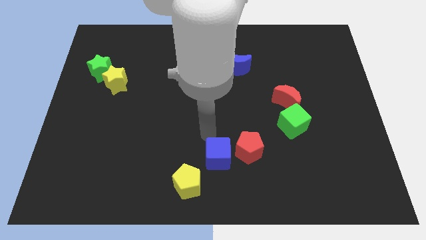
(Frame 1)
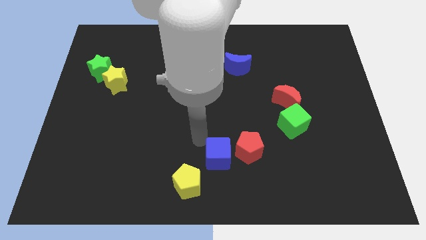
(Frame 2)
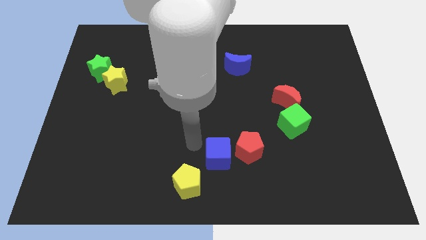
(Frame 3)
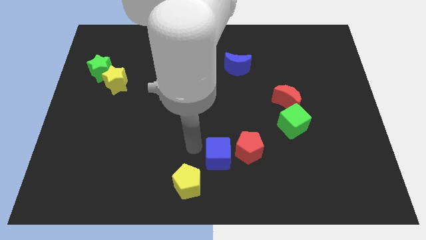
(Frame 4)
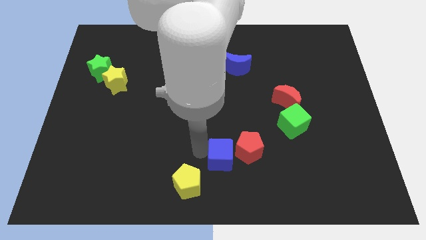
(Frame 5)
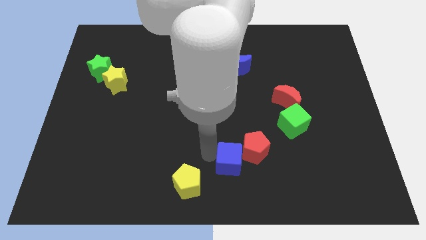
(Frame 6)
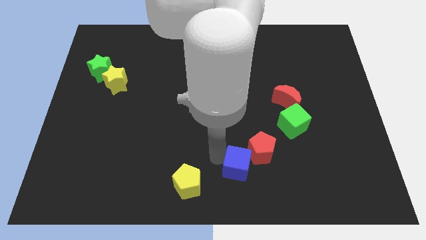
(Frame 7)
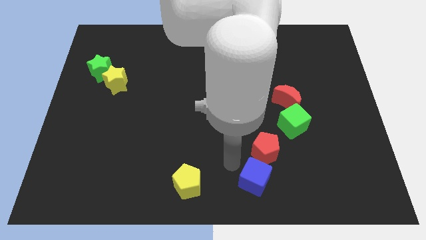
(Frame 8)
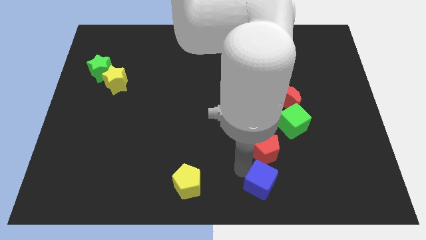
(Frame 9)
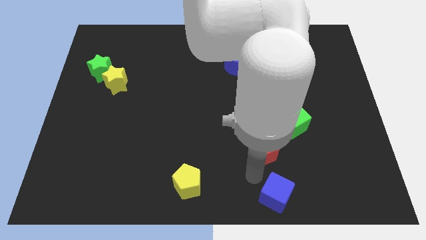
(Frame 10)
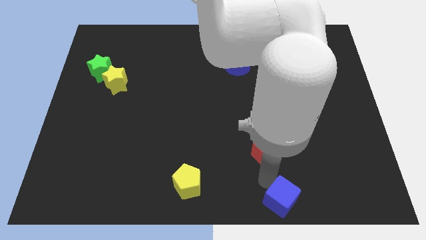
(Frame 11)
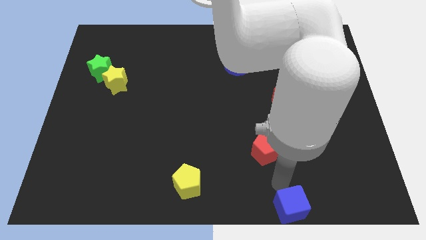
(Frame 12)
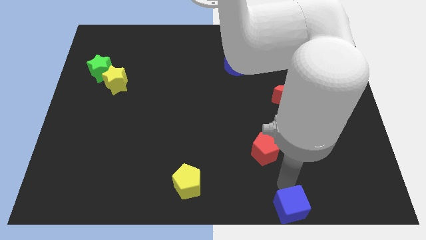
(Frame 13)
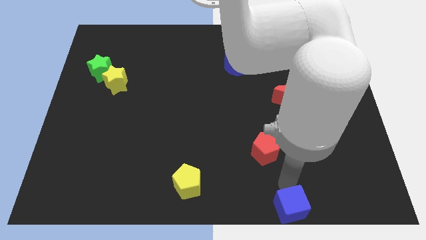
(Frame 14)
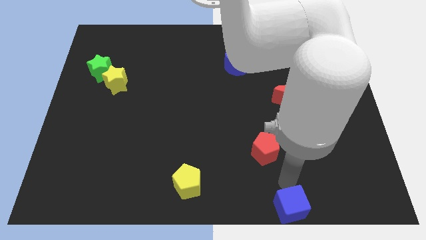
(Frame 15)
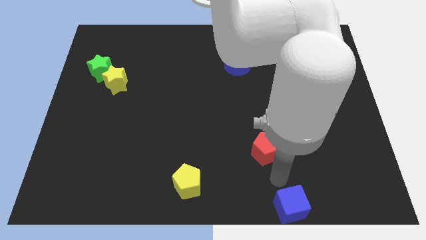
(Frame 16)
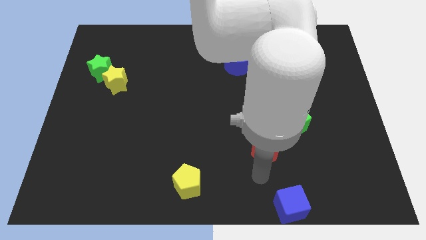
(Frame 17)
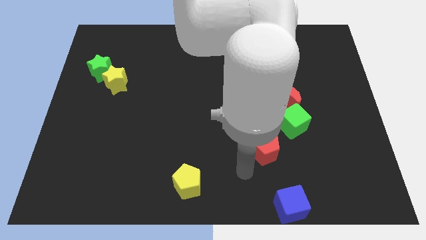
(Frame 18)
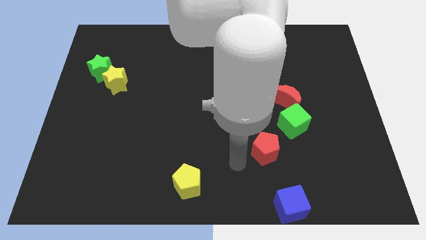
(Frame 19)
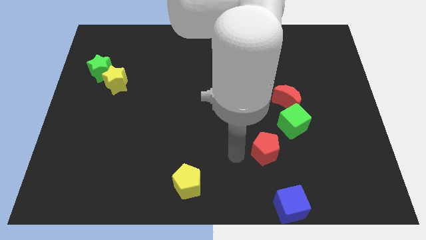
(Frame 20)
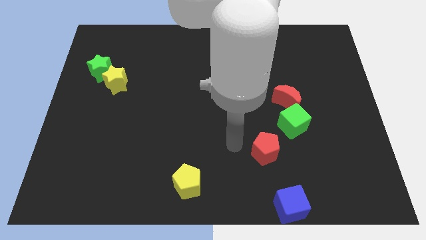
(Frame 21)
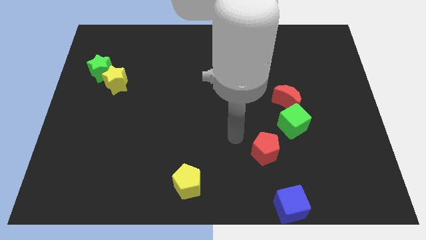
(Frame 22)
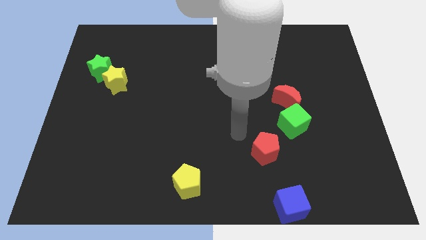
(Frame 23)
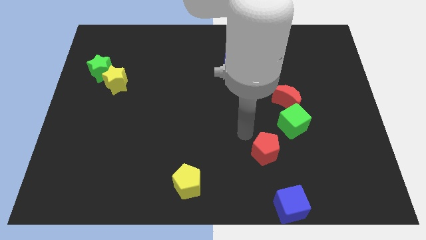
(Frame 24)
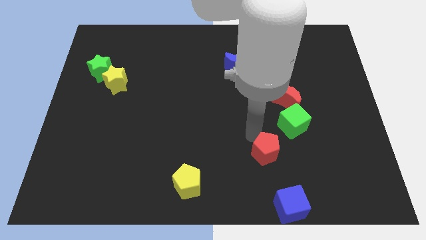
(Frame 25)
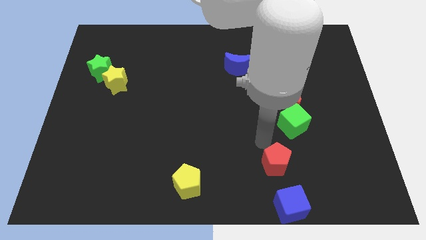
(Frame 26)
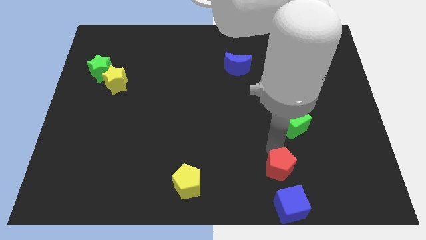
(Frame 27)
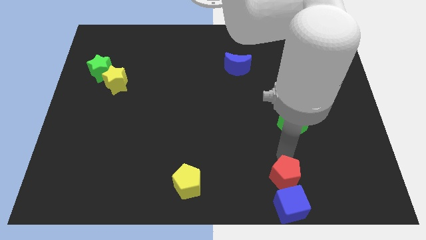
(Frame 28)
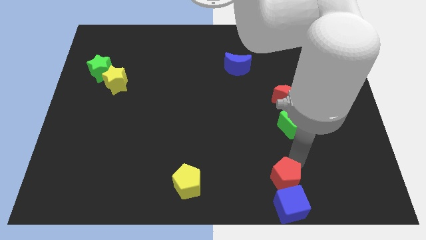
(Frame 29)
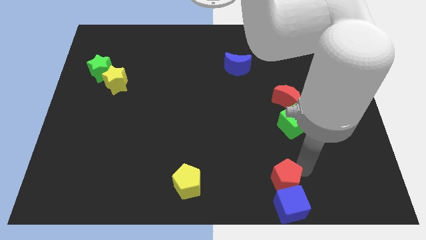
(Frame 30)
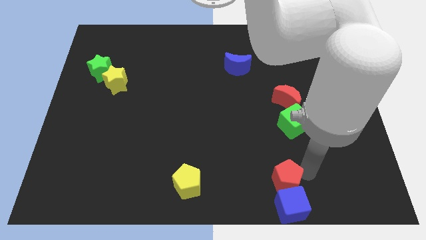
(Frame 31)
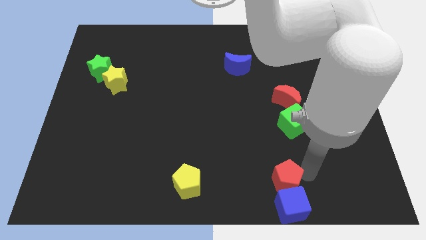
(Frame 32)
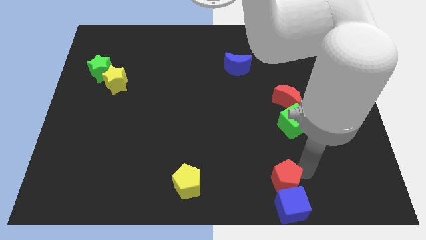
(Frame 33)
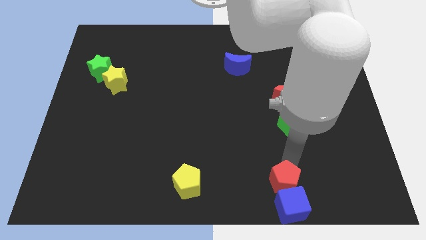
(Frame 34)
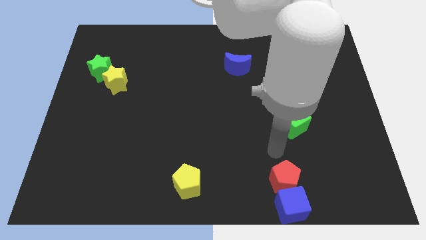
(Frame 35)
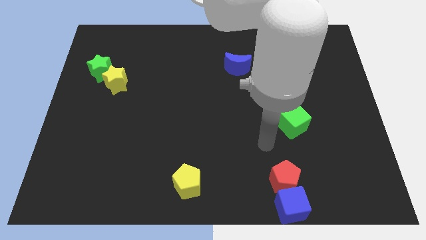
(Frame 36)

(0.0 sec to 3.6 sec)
move the blue cube and red pentagon to the bottom side of the table

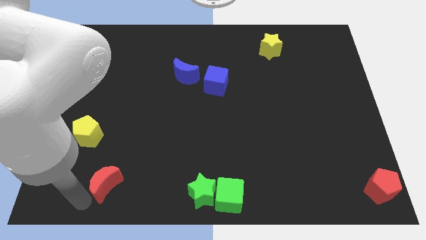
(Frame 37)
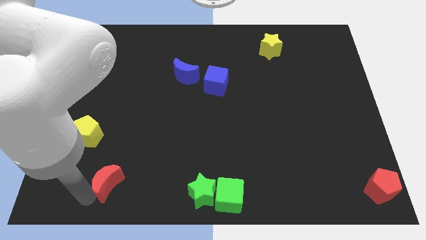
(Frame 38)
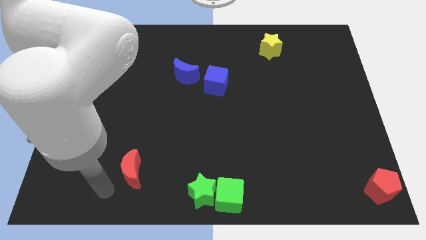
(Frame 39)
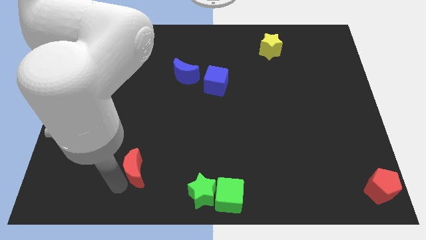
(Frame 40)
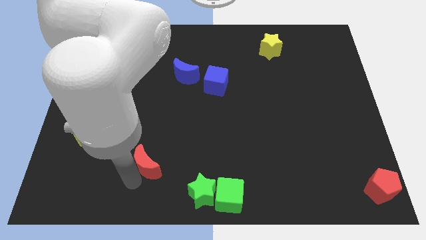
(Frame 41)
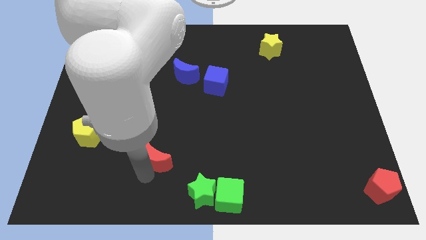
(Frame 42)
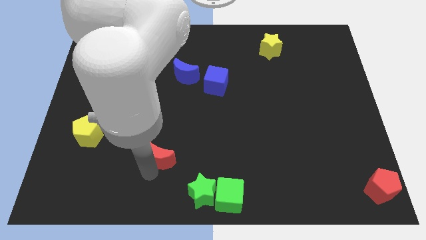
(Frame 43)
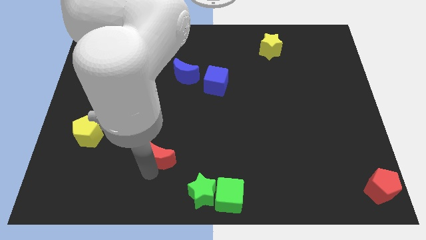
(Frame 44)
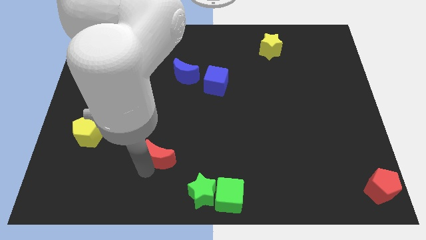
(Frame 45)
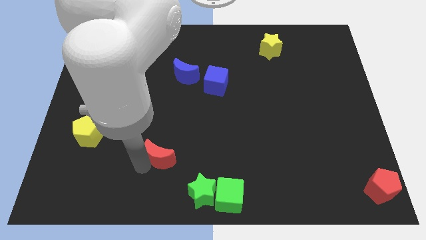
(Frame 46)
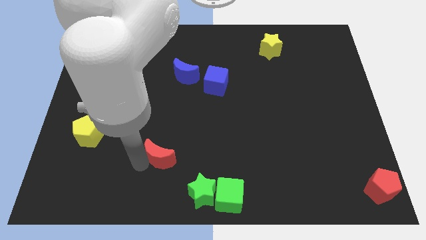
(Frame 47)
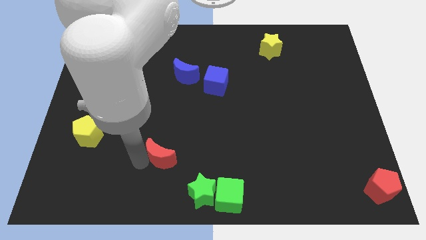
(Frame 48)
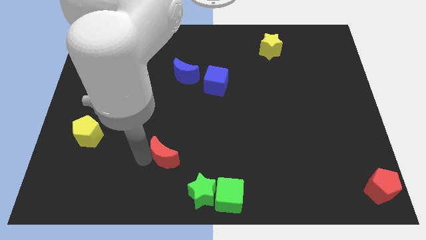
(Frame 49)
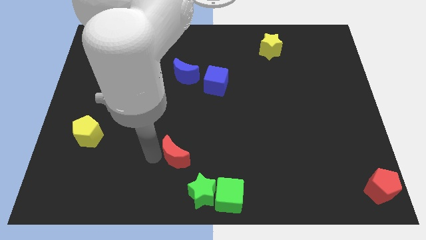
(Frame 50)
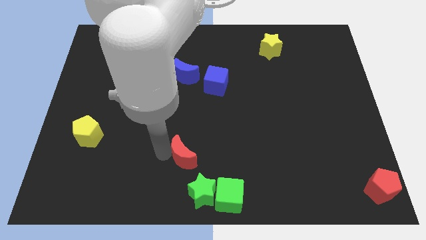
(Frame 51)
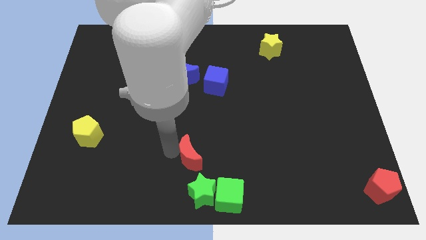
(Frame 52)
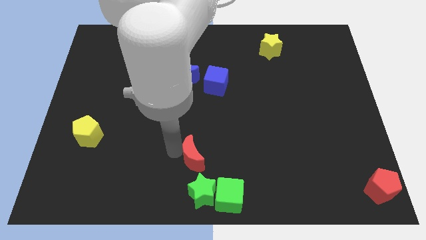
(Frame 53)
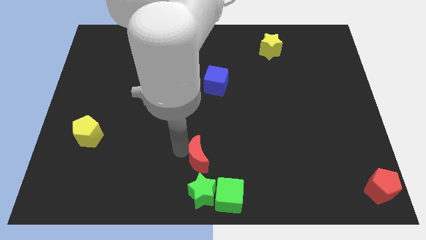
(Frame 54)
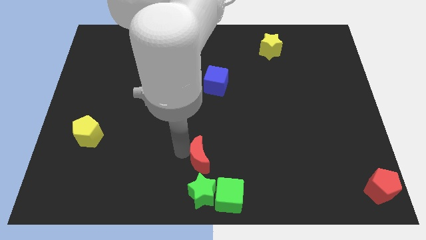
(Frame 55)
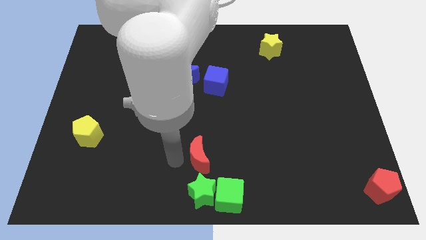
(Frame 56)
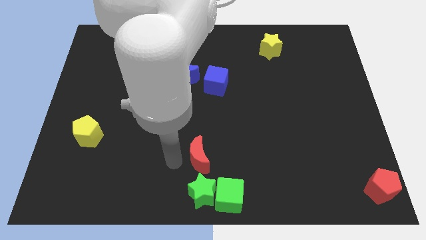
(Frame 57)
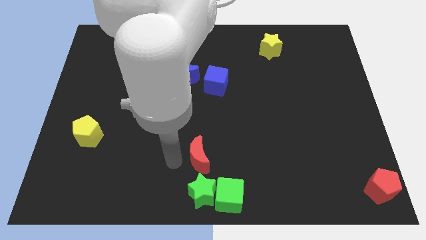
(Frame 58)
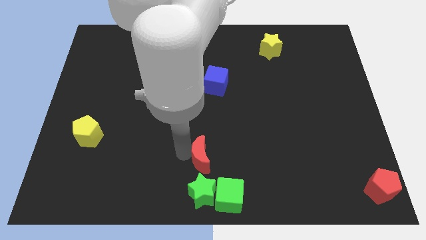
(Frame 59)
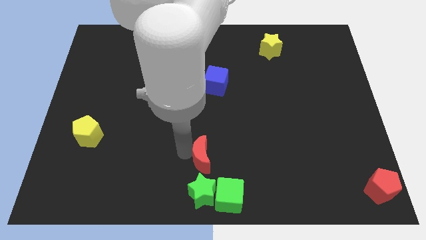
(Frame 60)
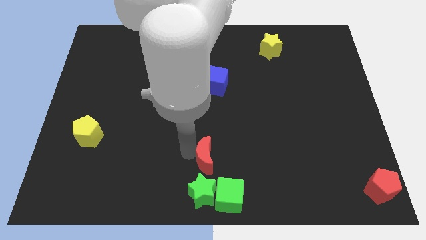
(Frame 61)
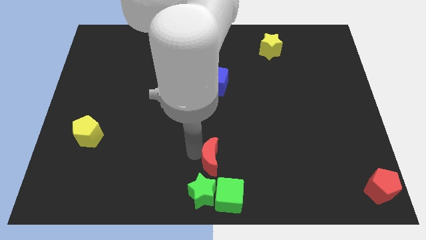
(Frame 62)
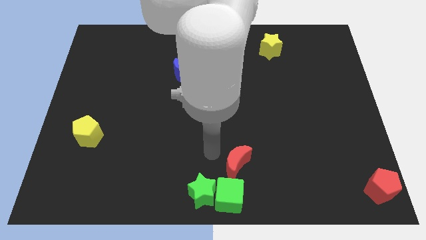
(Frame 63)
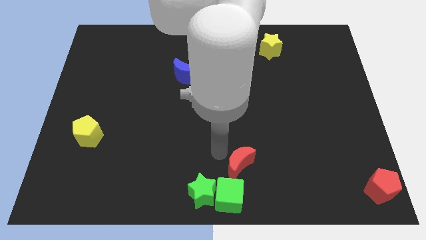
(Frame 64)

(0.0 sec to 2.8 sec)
push red crescent above green cube

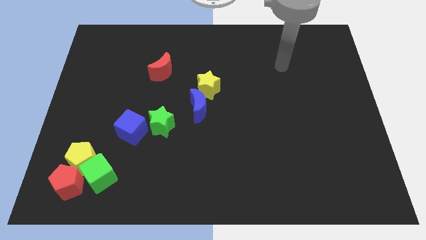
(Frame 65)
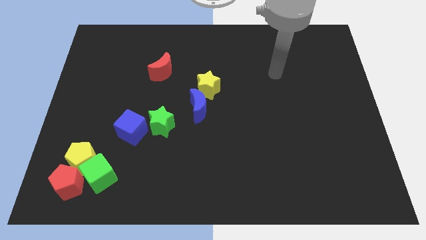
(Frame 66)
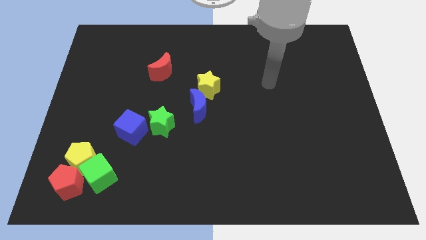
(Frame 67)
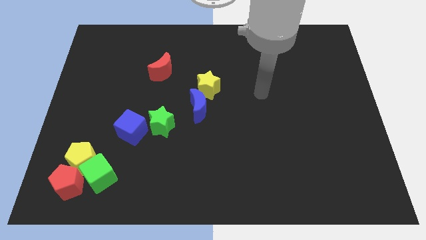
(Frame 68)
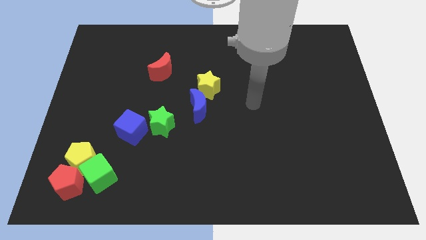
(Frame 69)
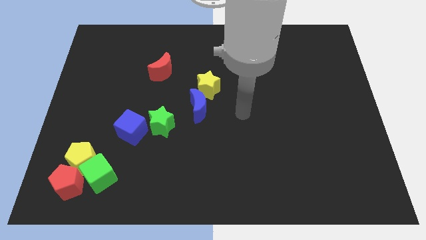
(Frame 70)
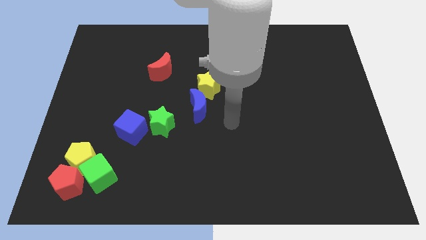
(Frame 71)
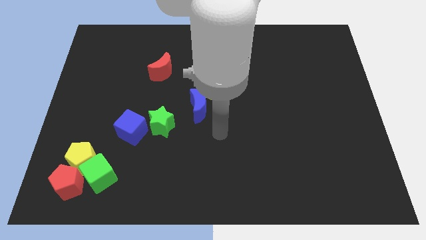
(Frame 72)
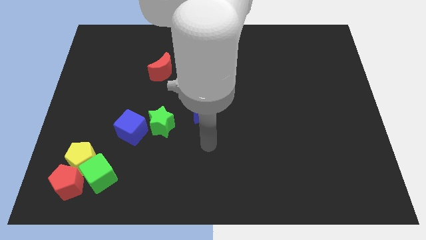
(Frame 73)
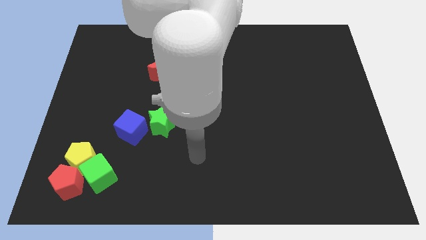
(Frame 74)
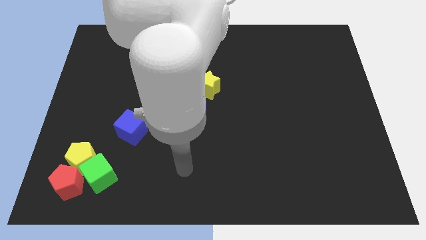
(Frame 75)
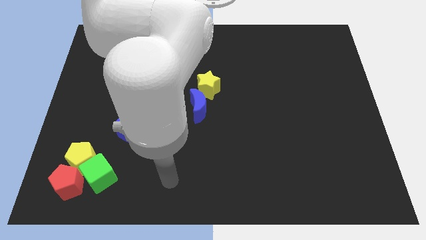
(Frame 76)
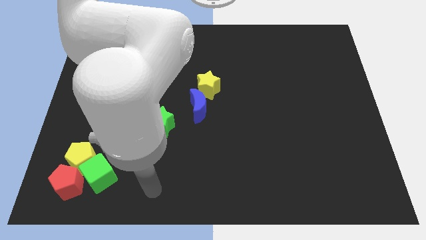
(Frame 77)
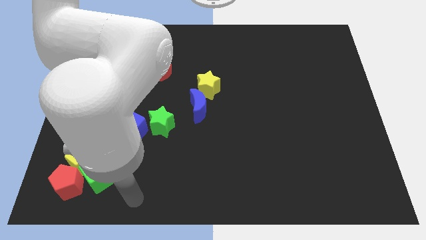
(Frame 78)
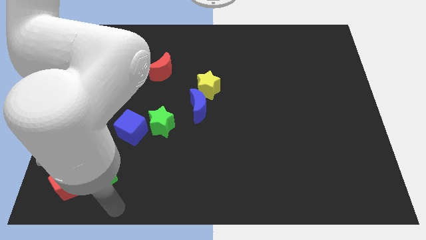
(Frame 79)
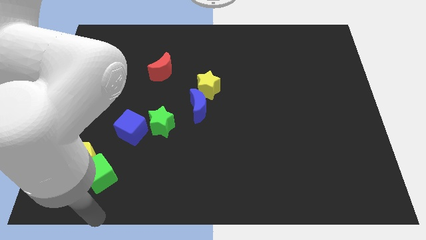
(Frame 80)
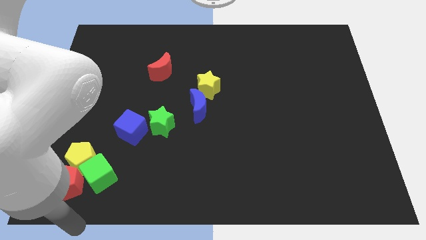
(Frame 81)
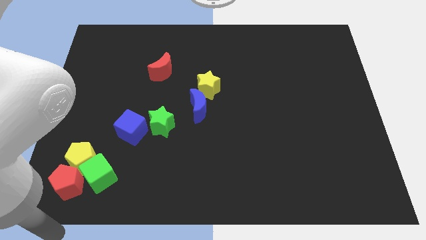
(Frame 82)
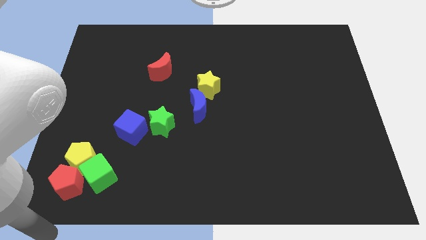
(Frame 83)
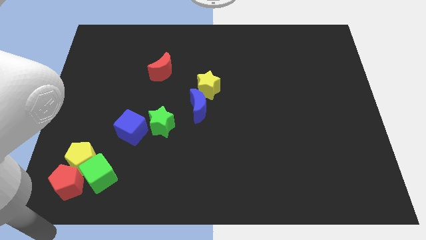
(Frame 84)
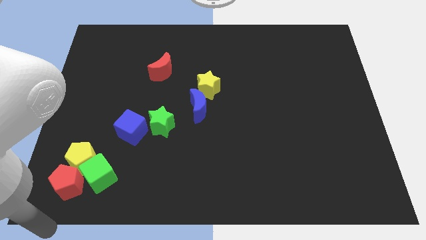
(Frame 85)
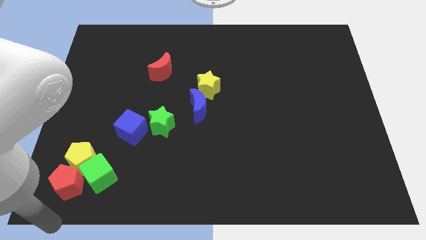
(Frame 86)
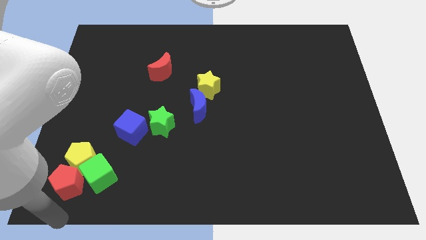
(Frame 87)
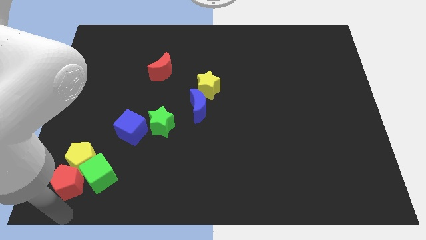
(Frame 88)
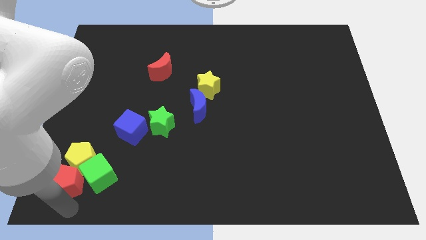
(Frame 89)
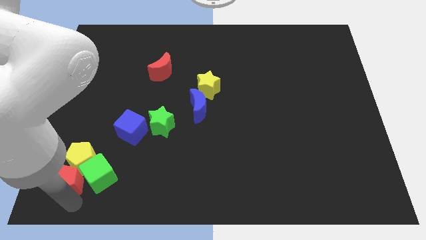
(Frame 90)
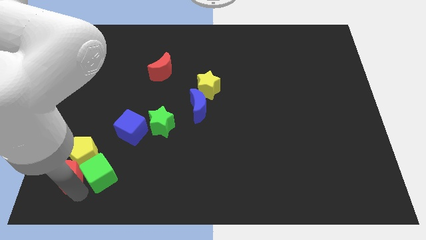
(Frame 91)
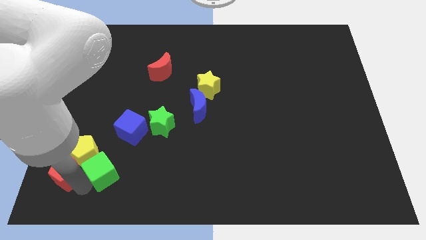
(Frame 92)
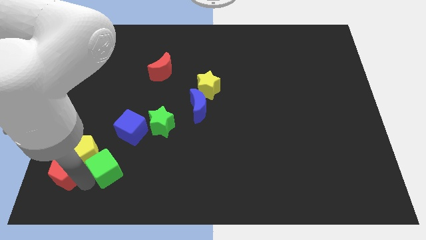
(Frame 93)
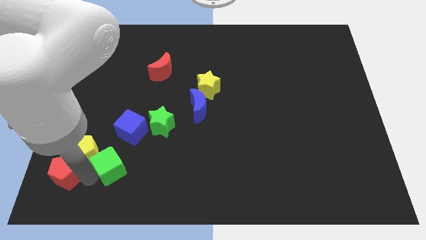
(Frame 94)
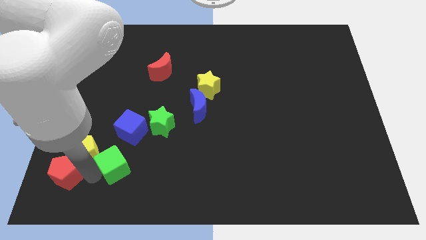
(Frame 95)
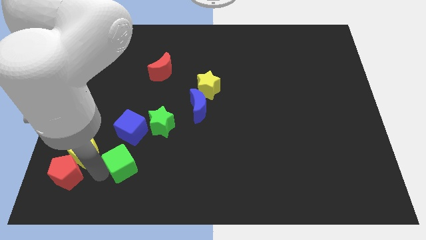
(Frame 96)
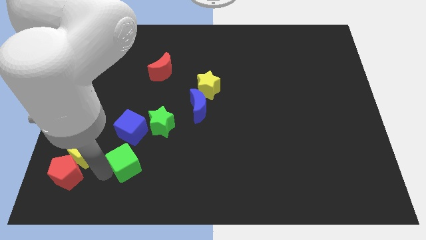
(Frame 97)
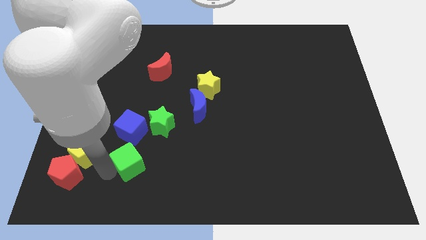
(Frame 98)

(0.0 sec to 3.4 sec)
point your arm between yellow pentagon and green star
